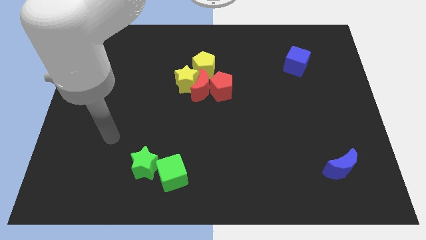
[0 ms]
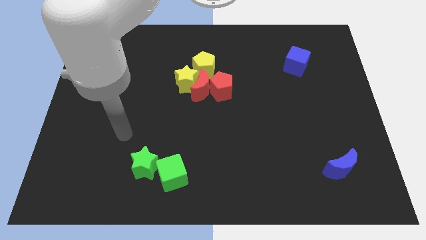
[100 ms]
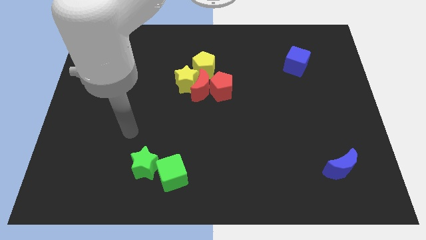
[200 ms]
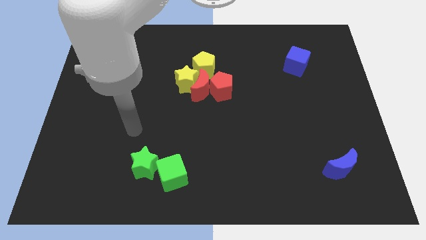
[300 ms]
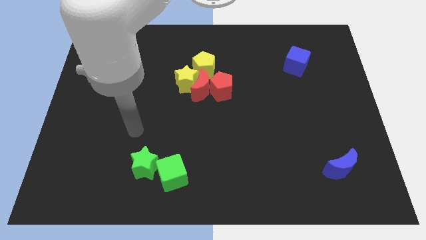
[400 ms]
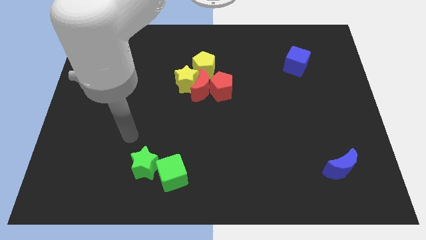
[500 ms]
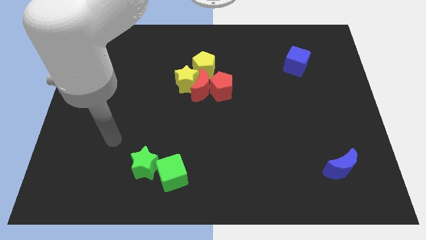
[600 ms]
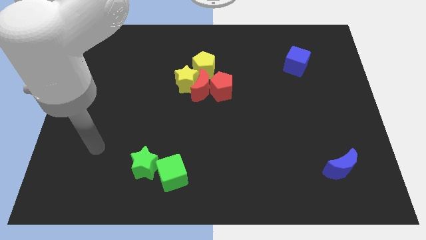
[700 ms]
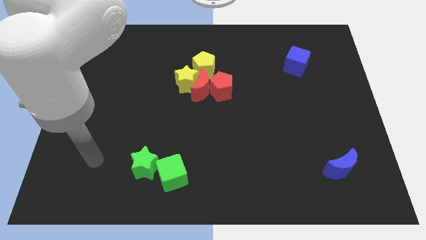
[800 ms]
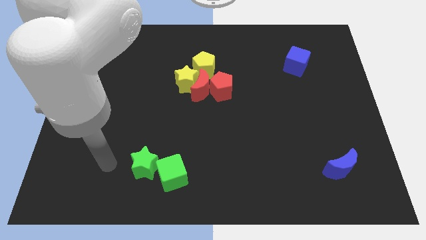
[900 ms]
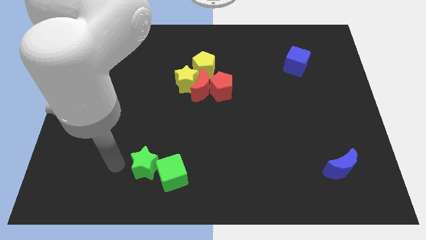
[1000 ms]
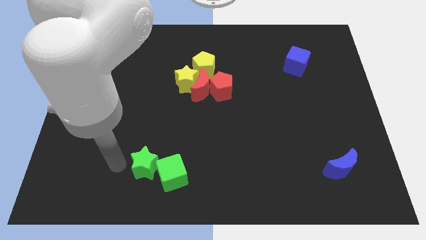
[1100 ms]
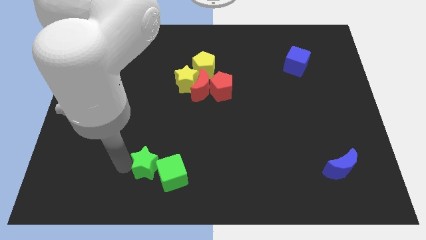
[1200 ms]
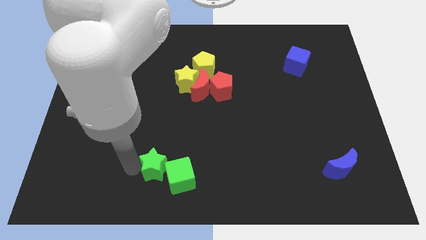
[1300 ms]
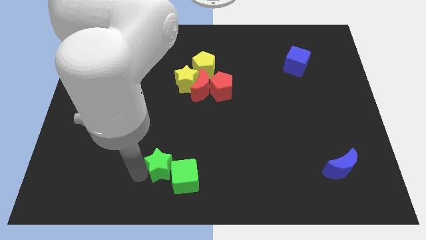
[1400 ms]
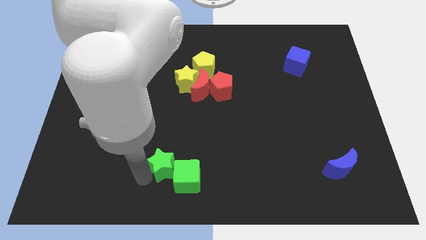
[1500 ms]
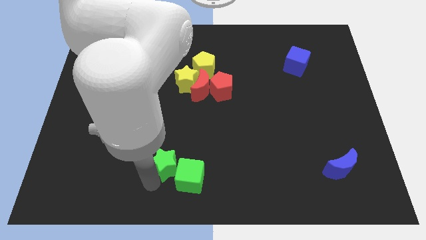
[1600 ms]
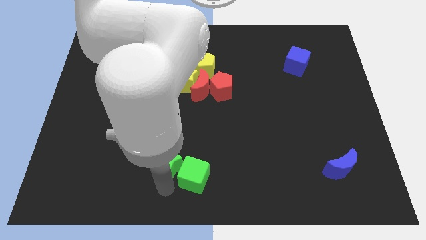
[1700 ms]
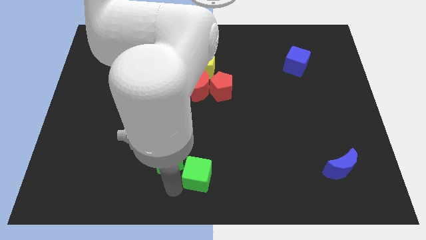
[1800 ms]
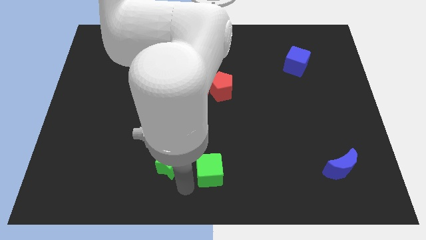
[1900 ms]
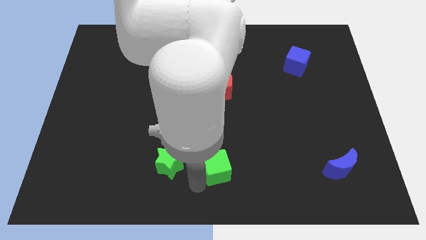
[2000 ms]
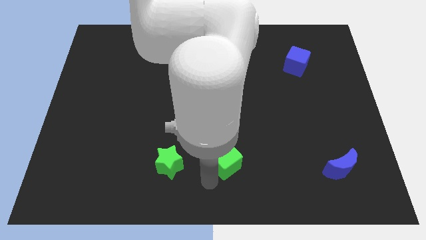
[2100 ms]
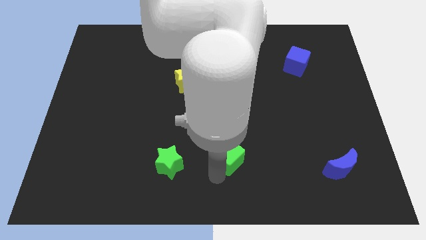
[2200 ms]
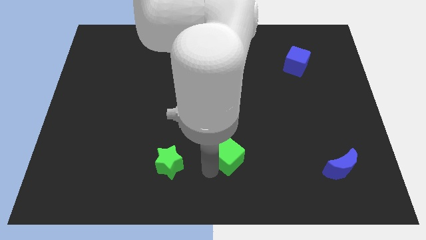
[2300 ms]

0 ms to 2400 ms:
move green star into green cube

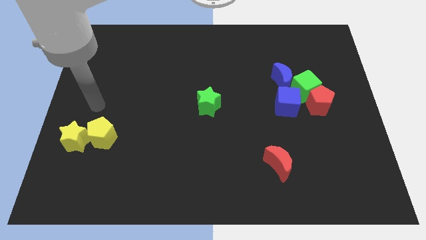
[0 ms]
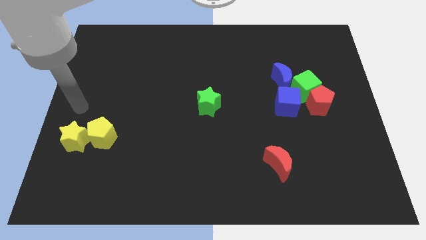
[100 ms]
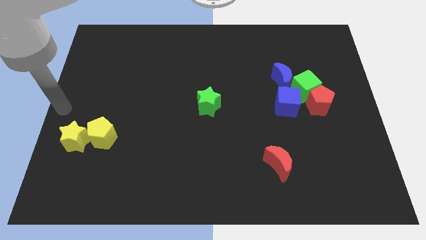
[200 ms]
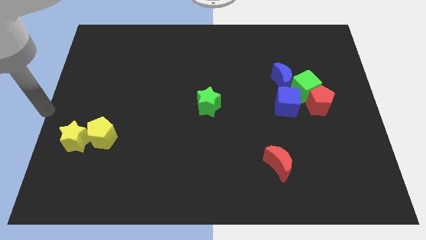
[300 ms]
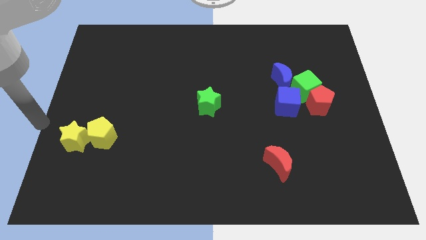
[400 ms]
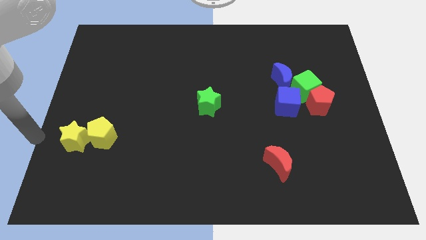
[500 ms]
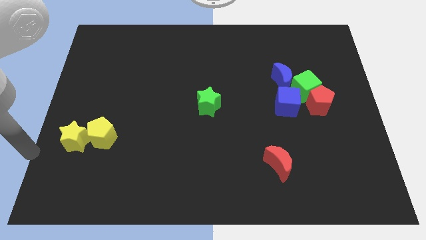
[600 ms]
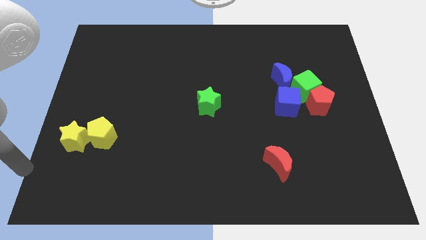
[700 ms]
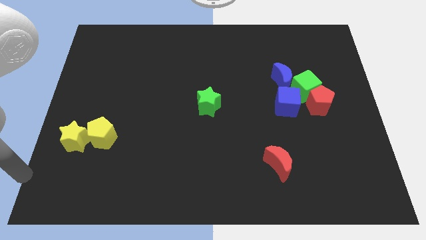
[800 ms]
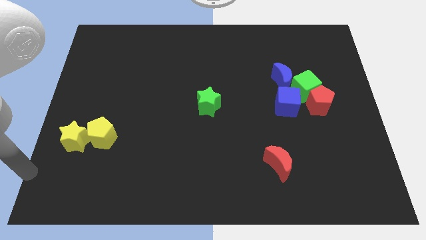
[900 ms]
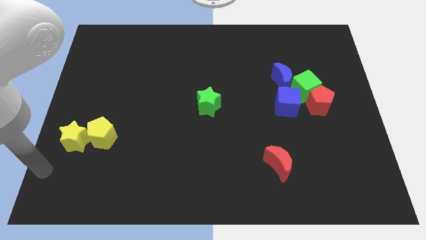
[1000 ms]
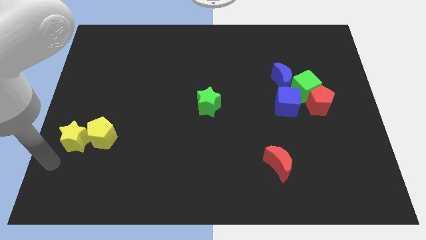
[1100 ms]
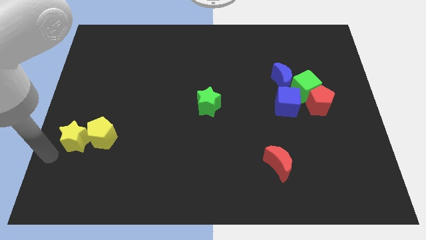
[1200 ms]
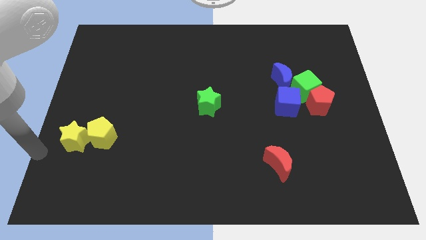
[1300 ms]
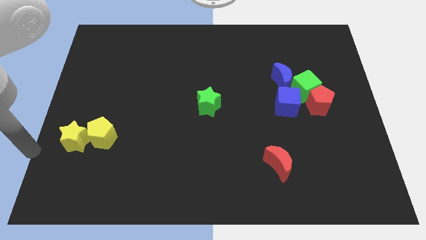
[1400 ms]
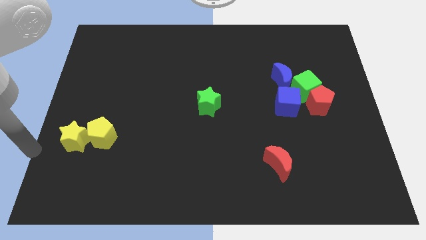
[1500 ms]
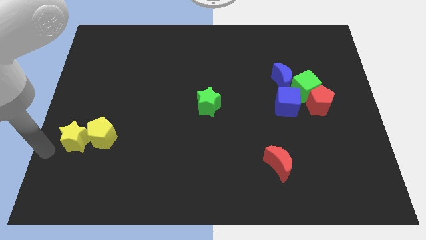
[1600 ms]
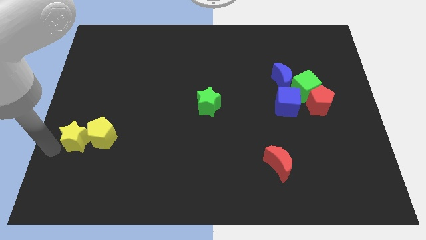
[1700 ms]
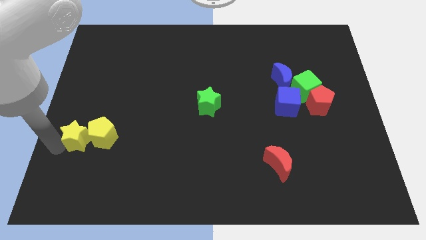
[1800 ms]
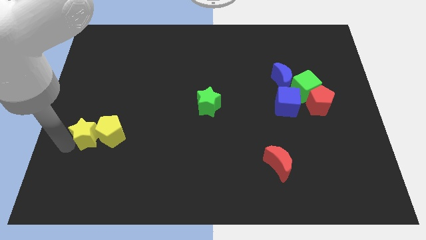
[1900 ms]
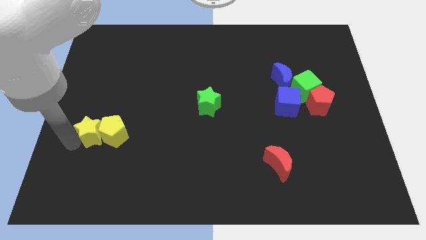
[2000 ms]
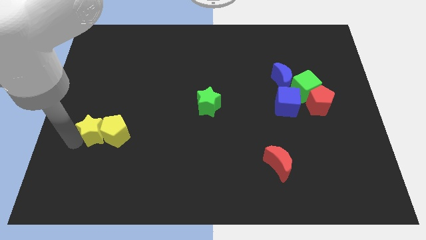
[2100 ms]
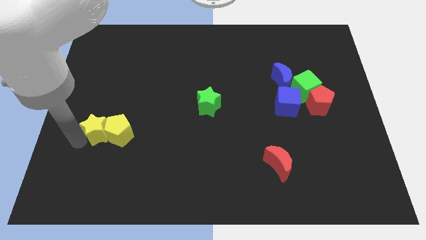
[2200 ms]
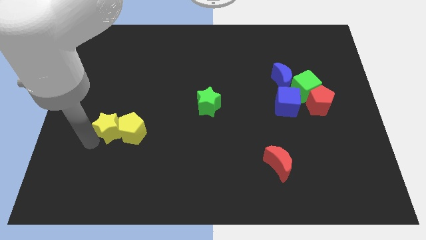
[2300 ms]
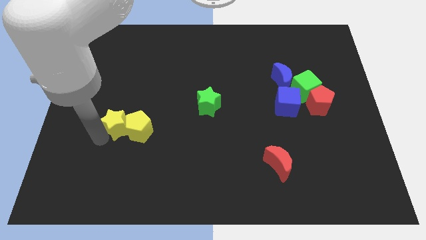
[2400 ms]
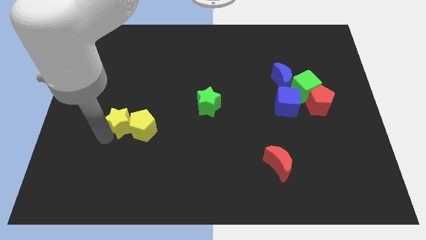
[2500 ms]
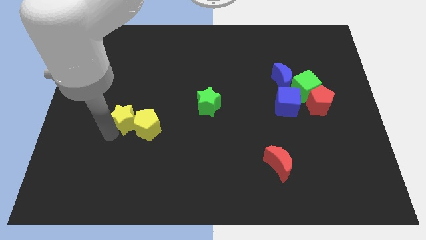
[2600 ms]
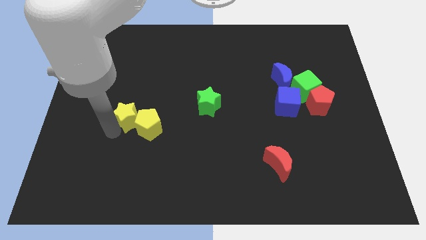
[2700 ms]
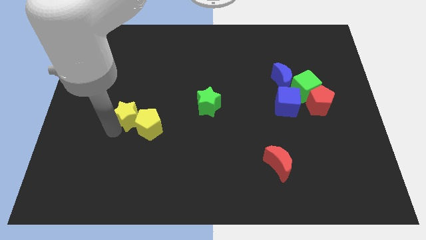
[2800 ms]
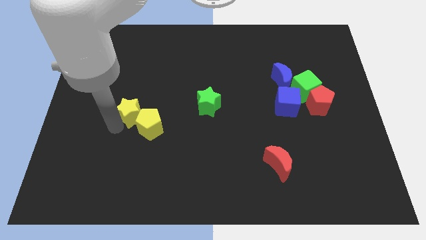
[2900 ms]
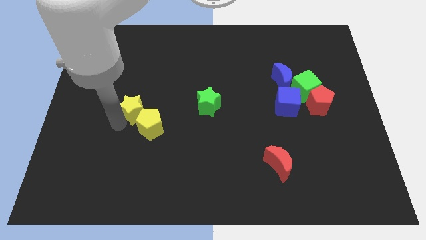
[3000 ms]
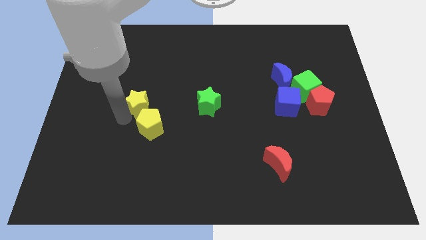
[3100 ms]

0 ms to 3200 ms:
push the yellow star into the yellow pentagon

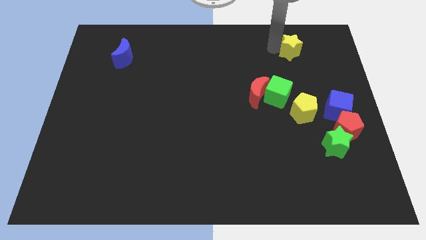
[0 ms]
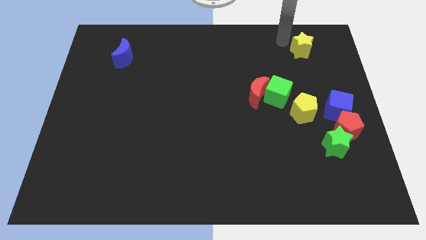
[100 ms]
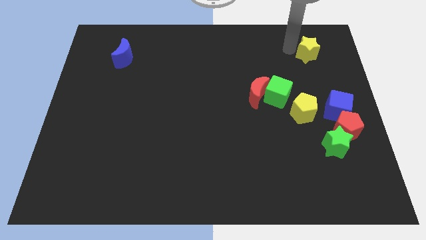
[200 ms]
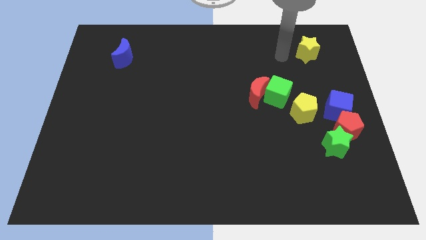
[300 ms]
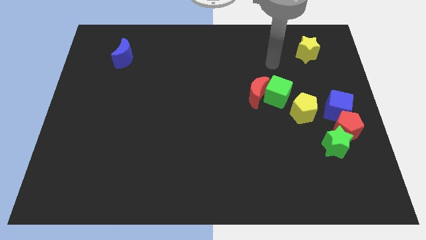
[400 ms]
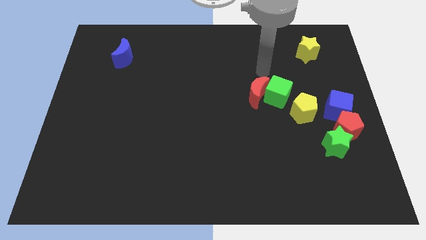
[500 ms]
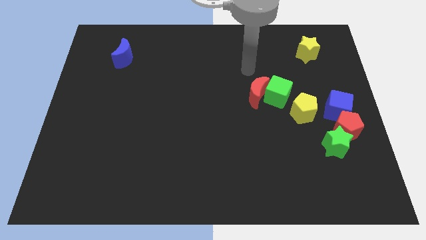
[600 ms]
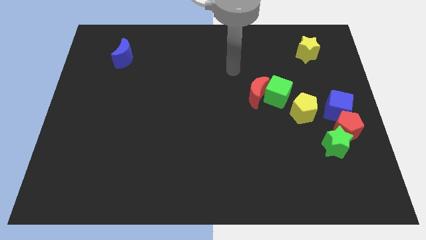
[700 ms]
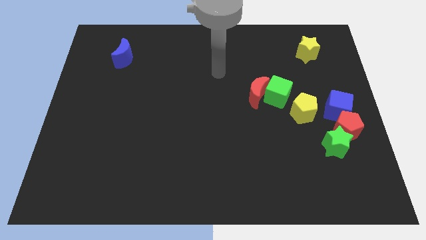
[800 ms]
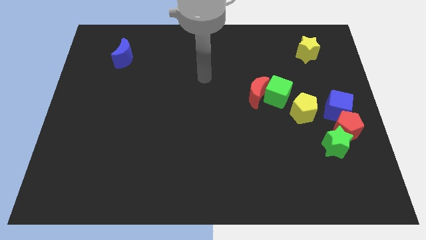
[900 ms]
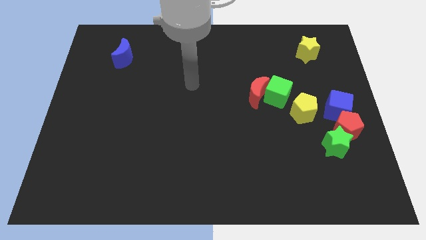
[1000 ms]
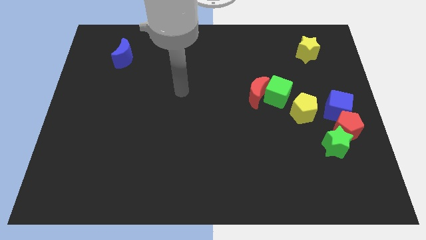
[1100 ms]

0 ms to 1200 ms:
slightly move the yellow pentagon towards the top right corner

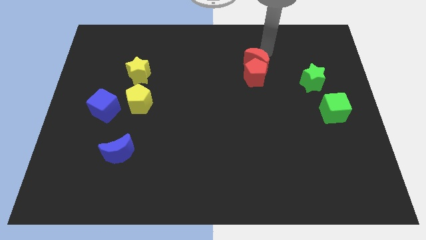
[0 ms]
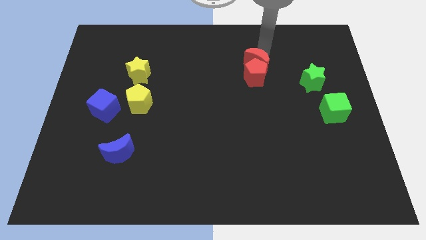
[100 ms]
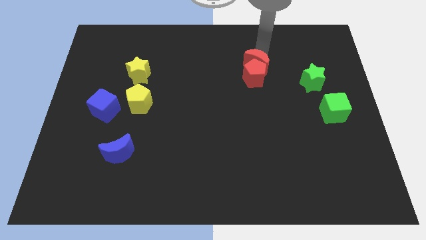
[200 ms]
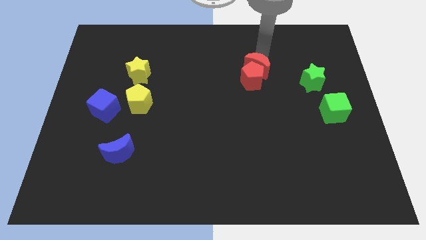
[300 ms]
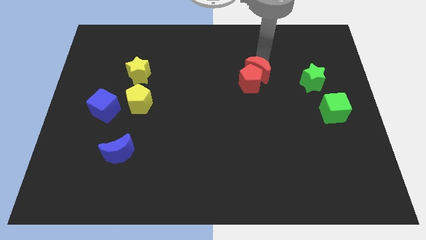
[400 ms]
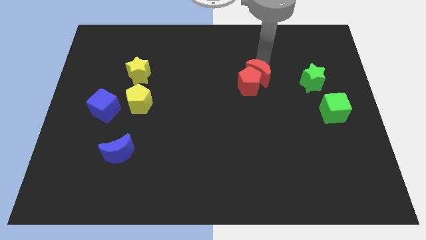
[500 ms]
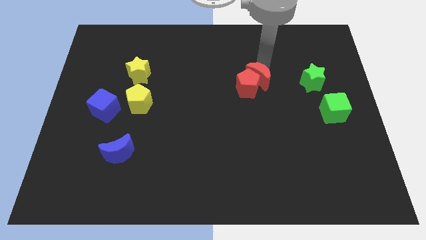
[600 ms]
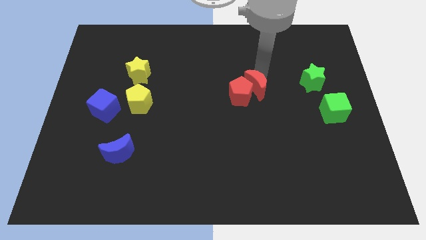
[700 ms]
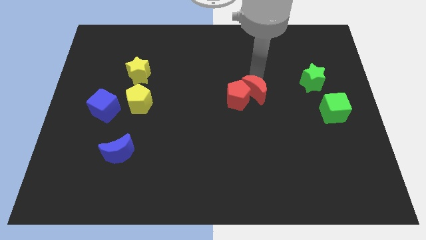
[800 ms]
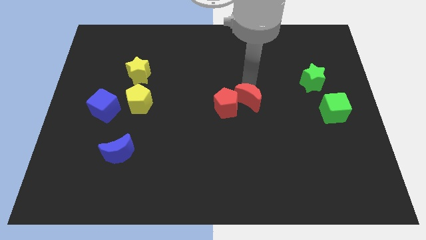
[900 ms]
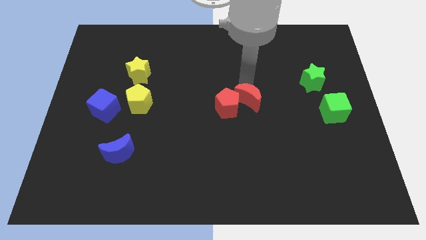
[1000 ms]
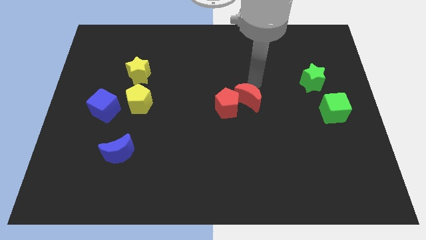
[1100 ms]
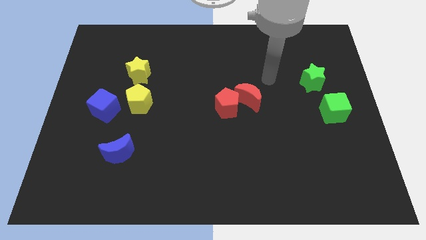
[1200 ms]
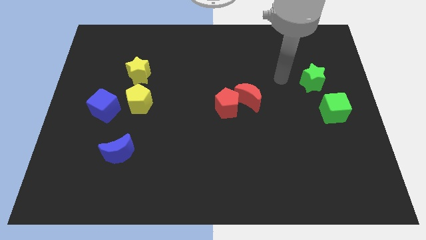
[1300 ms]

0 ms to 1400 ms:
move the red blocks to the center of the board

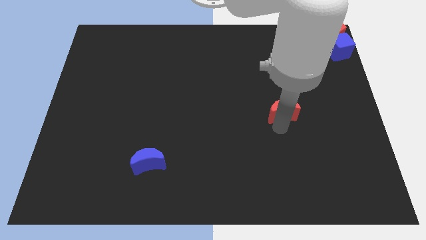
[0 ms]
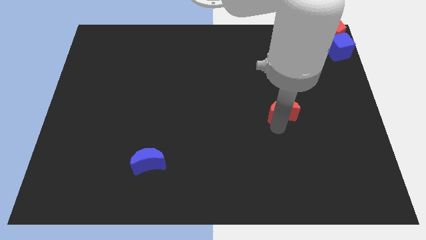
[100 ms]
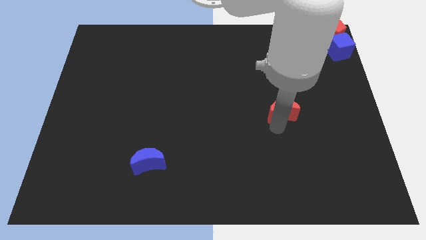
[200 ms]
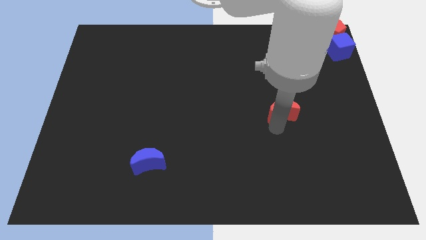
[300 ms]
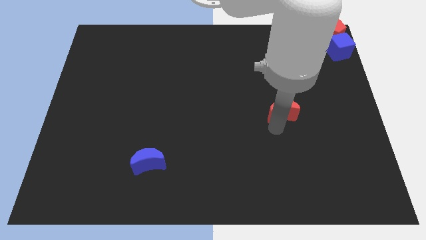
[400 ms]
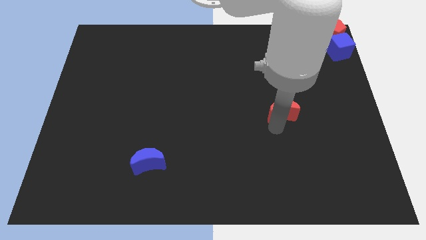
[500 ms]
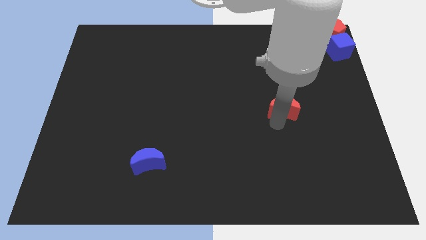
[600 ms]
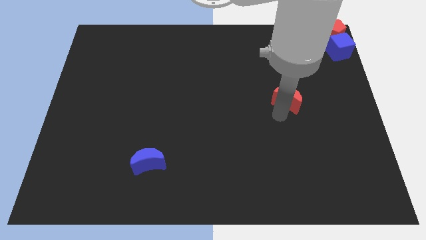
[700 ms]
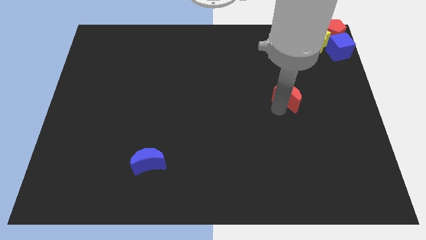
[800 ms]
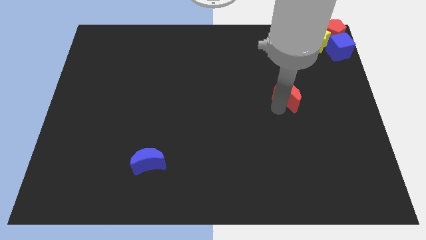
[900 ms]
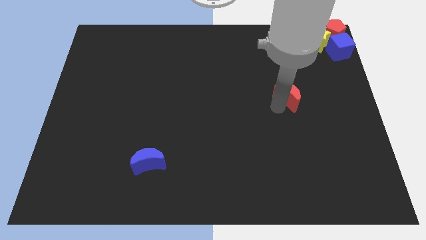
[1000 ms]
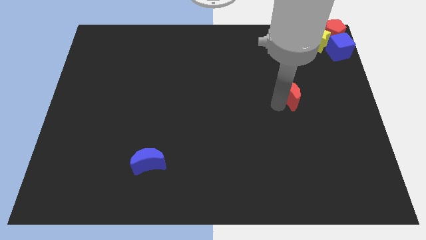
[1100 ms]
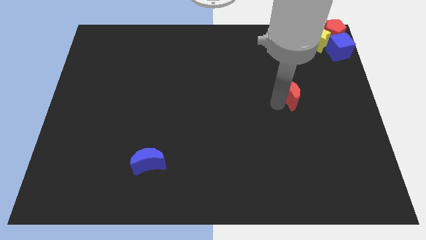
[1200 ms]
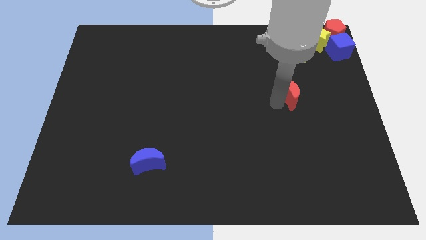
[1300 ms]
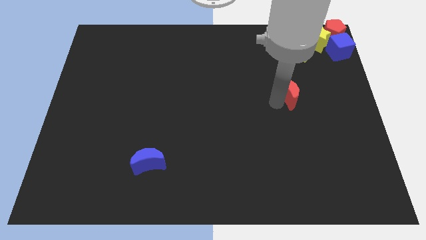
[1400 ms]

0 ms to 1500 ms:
slide the red crescent slightly upwards
